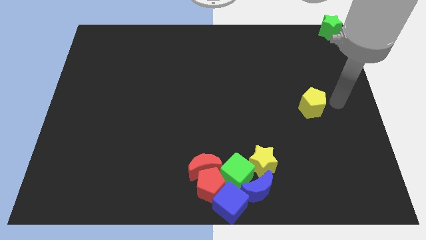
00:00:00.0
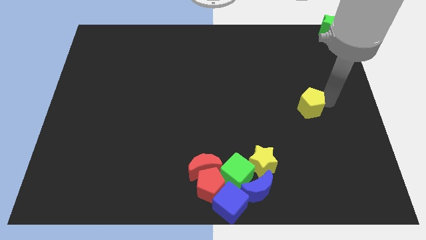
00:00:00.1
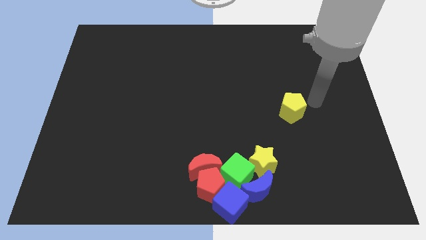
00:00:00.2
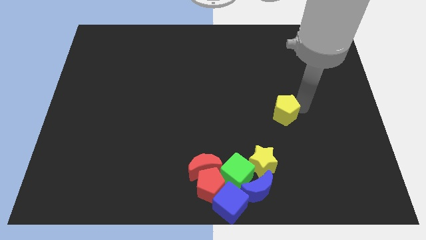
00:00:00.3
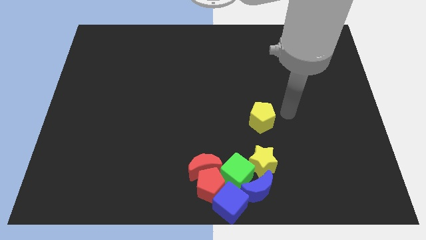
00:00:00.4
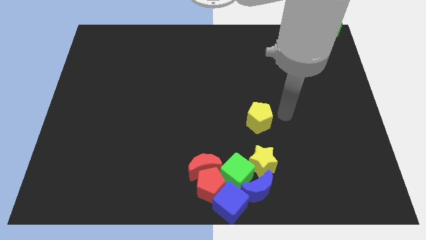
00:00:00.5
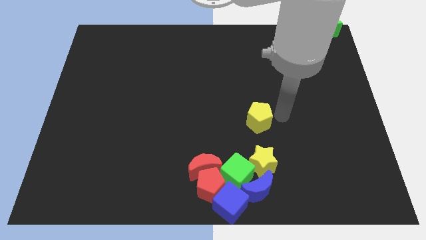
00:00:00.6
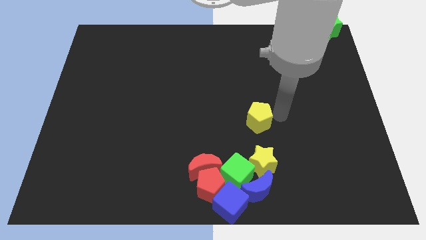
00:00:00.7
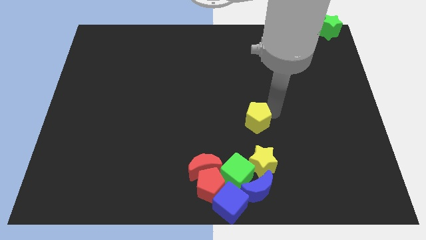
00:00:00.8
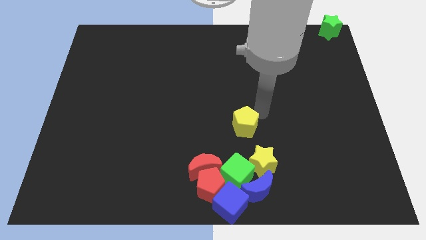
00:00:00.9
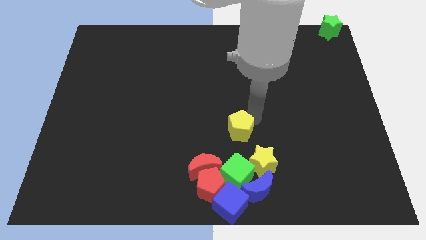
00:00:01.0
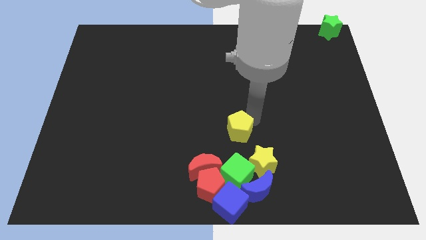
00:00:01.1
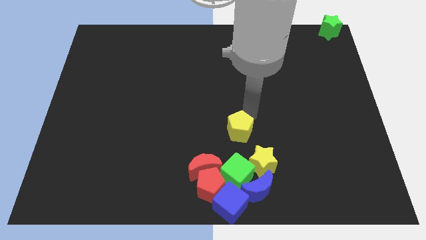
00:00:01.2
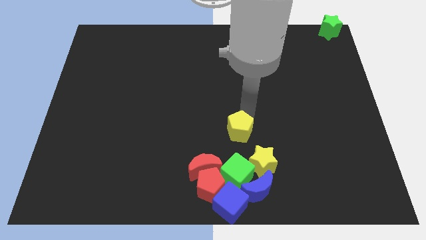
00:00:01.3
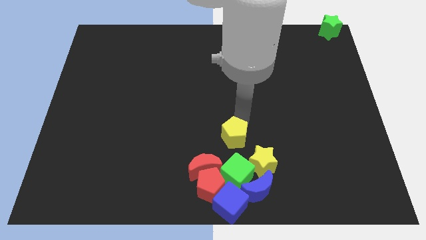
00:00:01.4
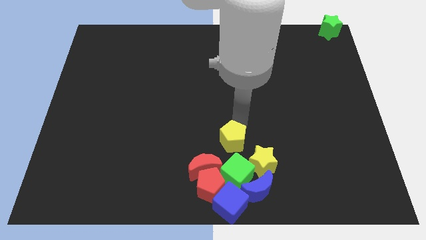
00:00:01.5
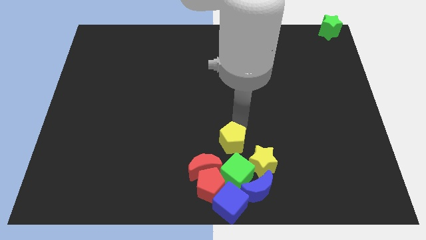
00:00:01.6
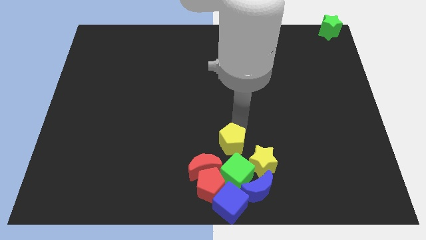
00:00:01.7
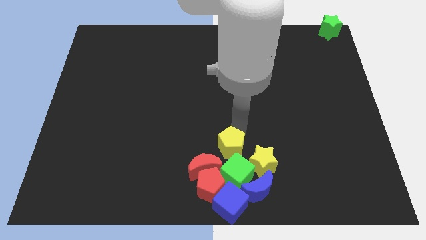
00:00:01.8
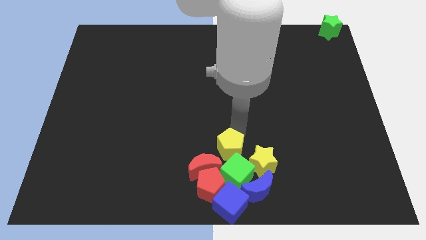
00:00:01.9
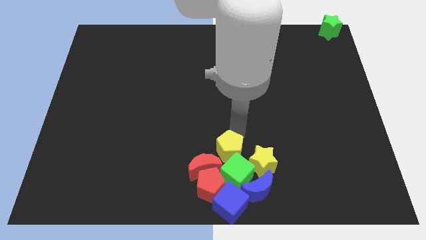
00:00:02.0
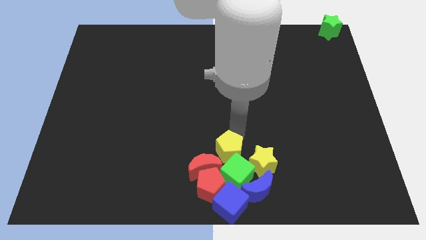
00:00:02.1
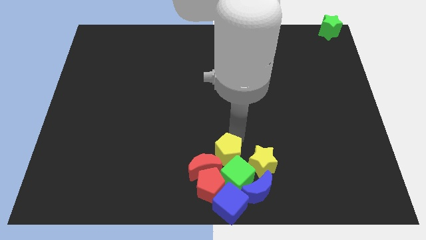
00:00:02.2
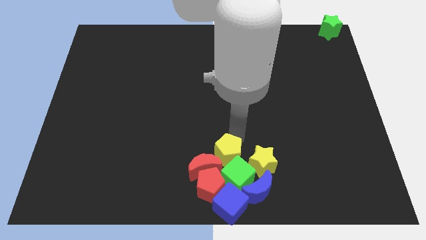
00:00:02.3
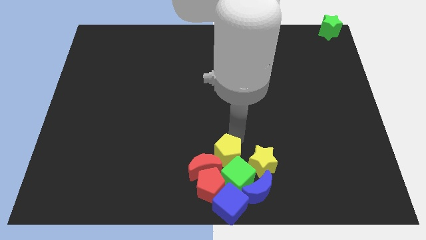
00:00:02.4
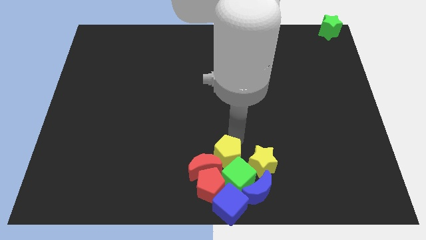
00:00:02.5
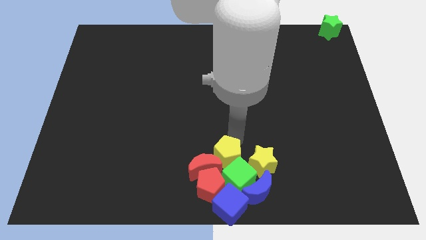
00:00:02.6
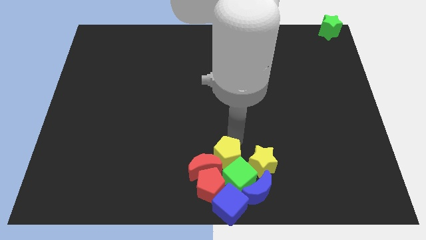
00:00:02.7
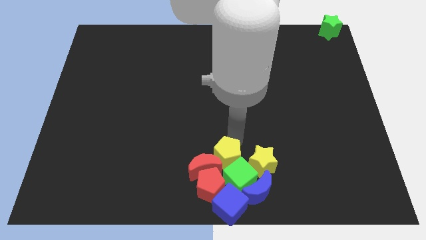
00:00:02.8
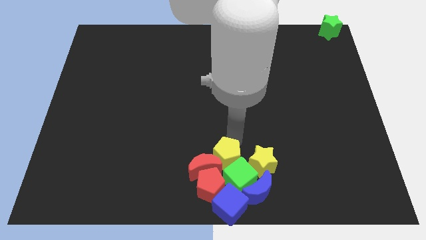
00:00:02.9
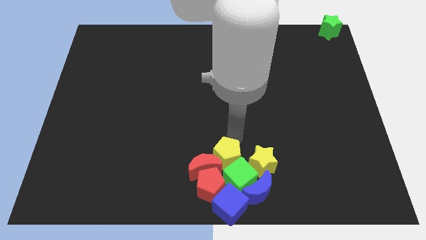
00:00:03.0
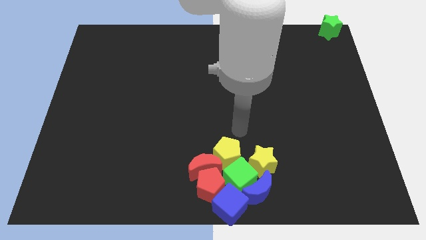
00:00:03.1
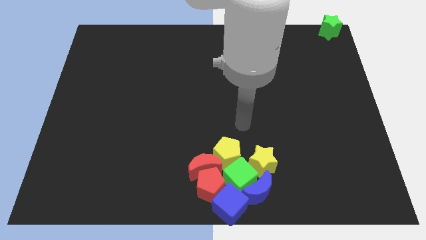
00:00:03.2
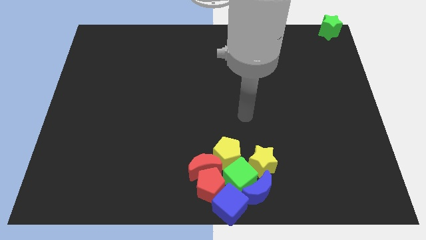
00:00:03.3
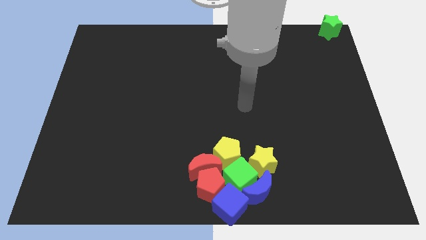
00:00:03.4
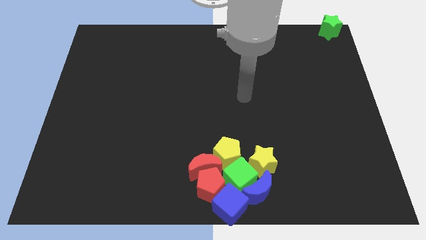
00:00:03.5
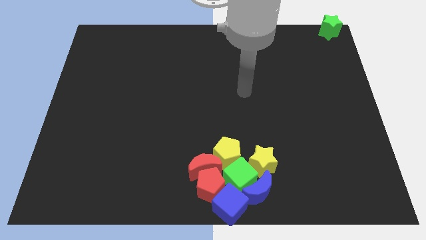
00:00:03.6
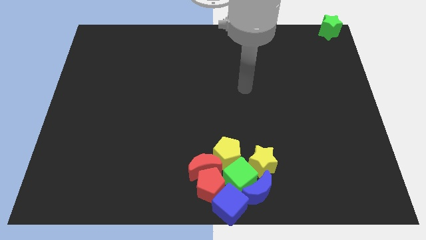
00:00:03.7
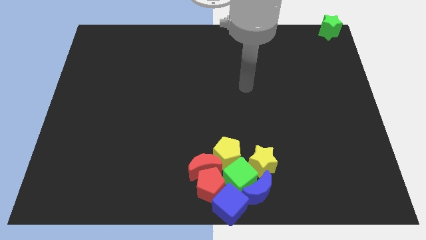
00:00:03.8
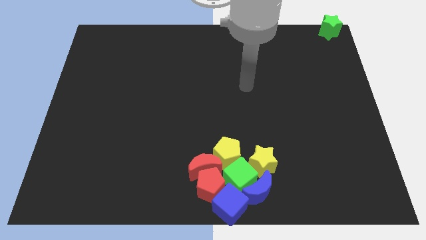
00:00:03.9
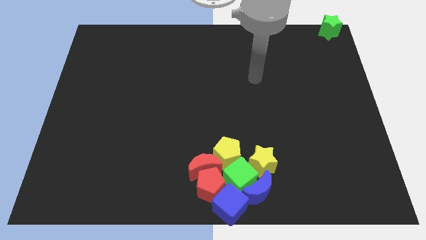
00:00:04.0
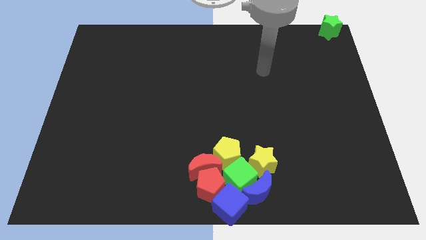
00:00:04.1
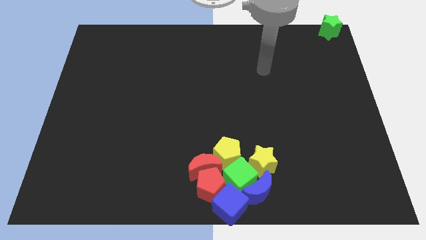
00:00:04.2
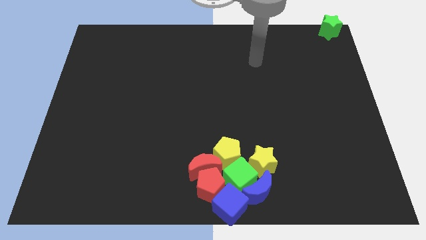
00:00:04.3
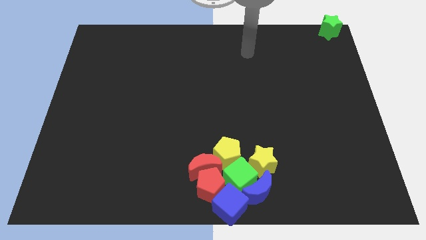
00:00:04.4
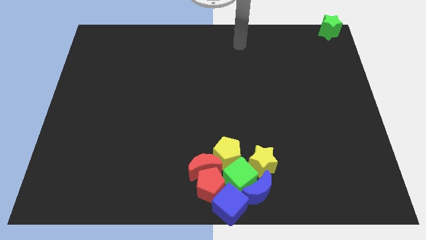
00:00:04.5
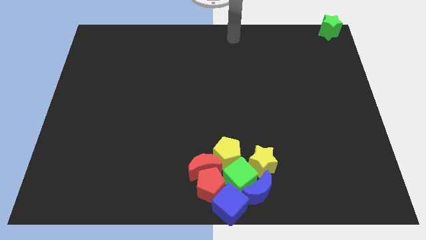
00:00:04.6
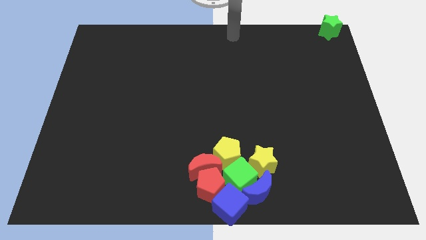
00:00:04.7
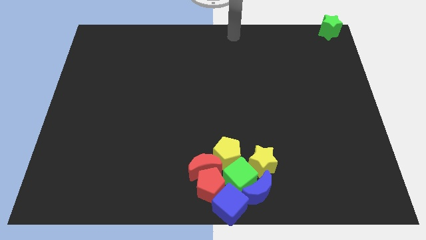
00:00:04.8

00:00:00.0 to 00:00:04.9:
push the yellow pentagon into the group of blocks

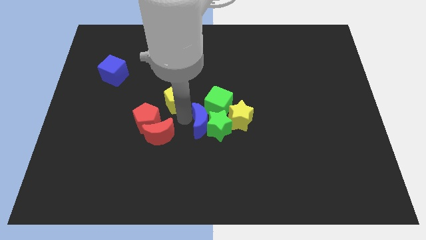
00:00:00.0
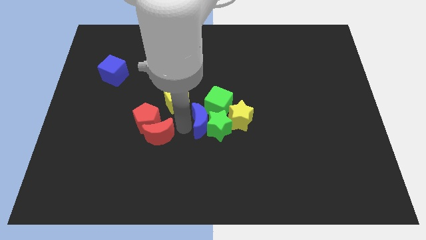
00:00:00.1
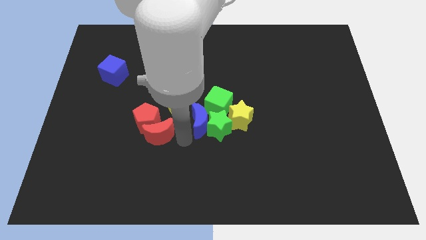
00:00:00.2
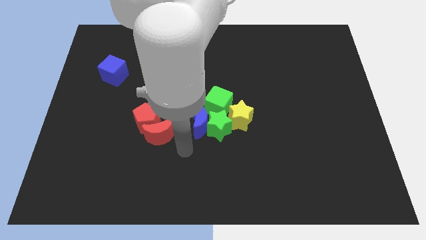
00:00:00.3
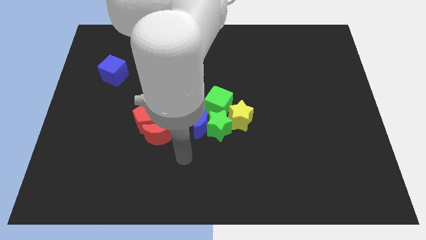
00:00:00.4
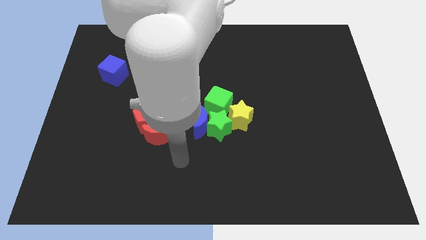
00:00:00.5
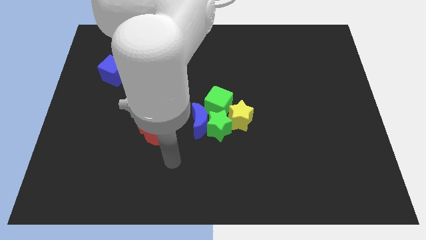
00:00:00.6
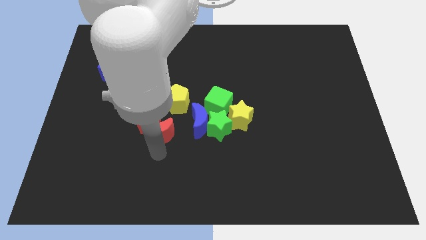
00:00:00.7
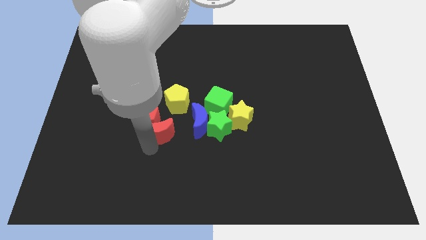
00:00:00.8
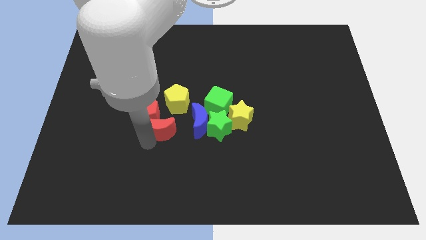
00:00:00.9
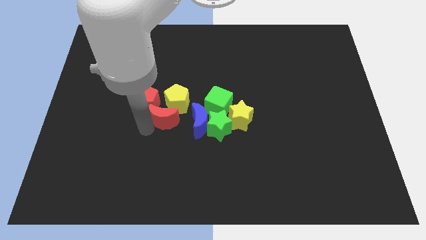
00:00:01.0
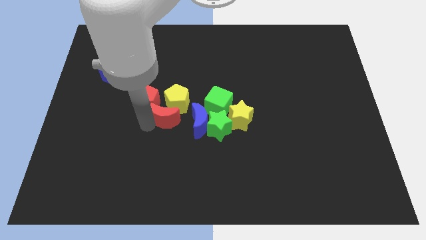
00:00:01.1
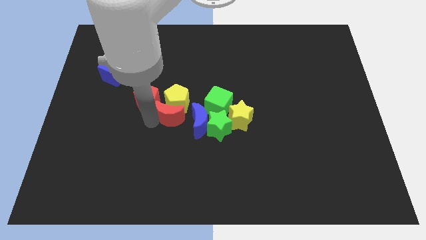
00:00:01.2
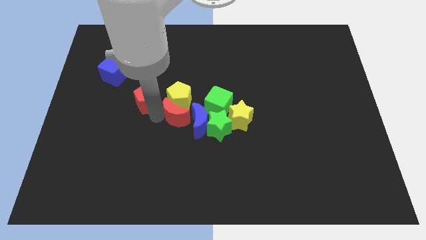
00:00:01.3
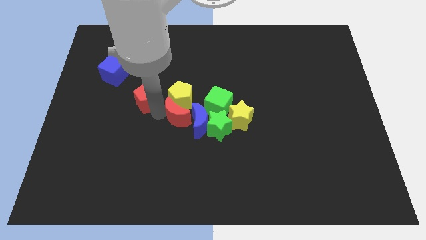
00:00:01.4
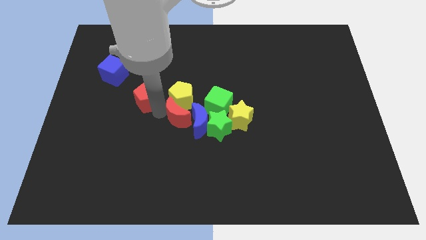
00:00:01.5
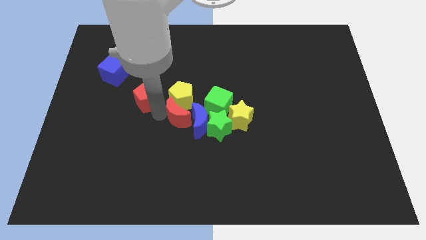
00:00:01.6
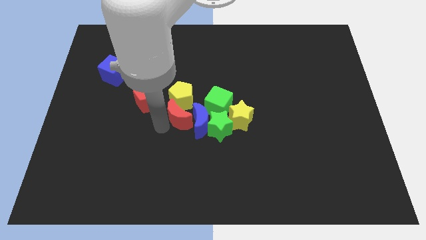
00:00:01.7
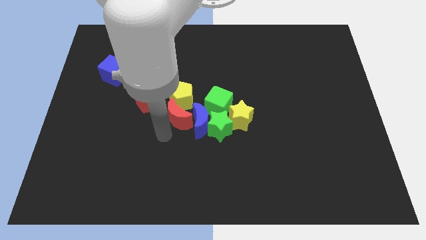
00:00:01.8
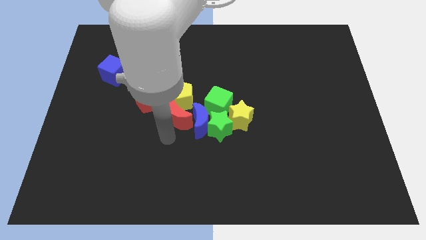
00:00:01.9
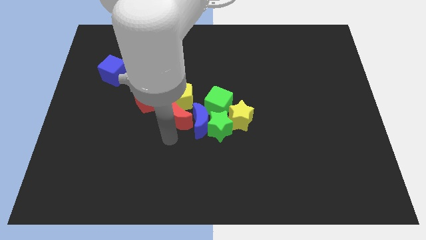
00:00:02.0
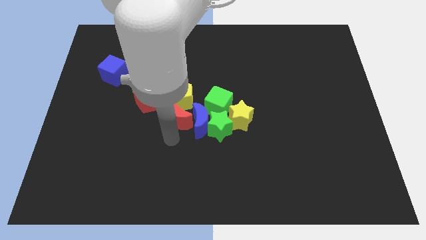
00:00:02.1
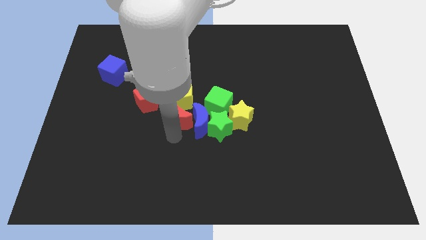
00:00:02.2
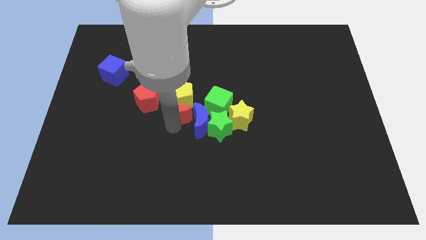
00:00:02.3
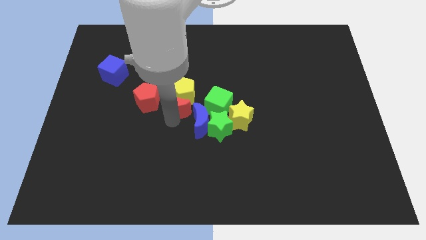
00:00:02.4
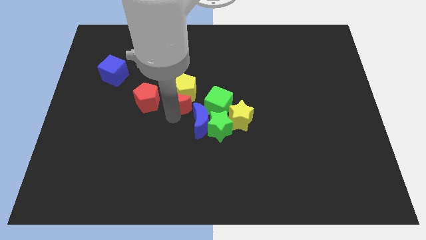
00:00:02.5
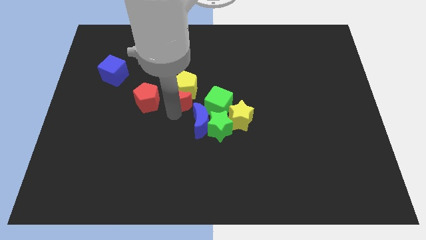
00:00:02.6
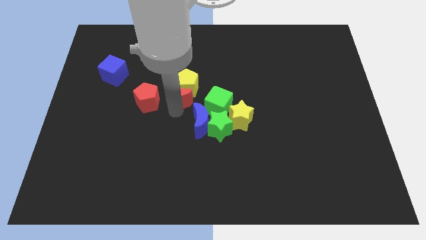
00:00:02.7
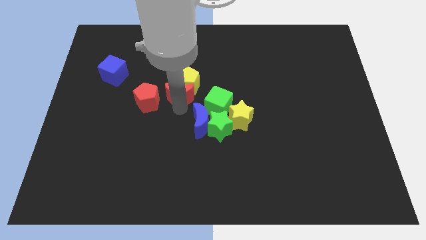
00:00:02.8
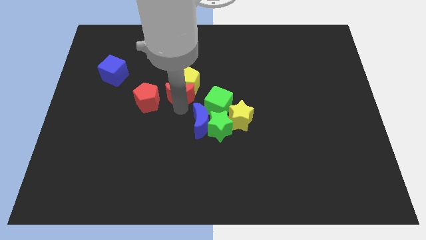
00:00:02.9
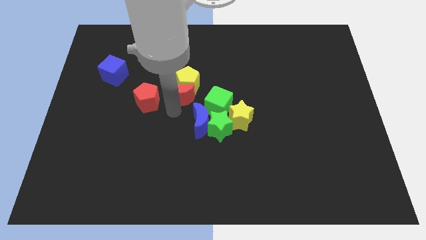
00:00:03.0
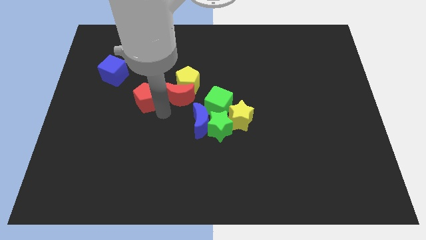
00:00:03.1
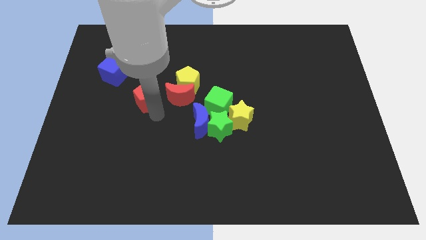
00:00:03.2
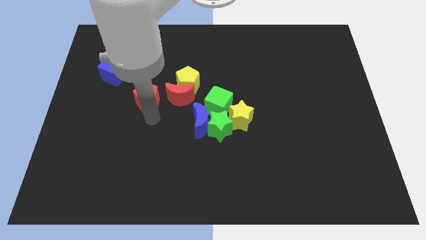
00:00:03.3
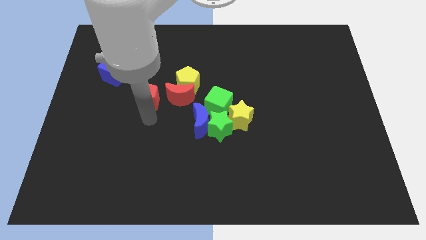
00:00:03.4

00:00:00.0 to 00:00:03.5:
drag the yellow pentagon and red moon to the top left side of the green cube

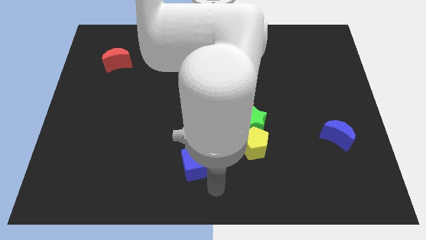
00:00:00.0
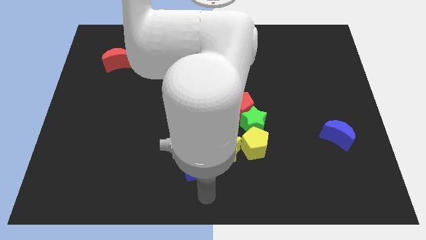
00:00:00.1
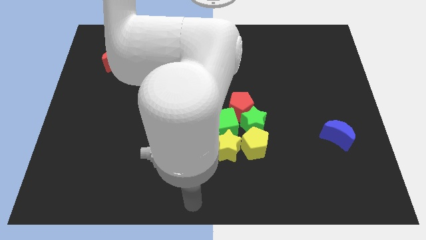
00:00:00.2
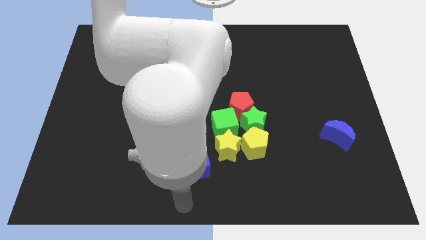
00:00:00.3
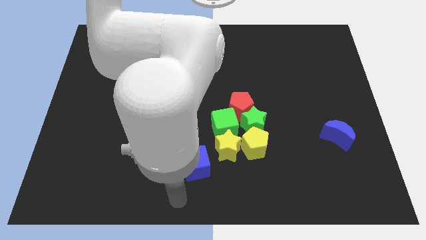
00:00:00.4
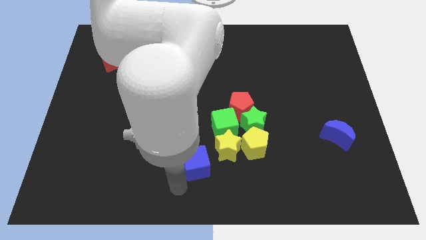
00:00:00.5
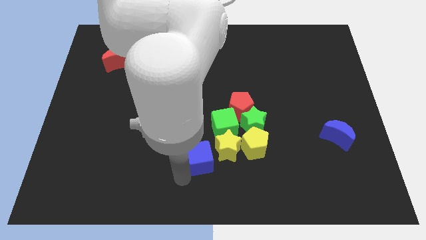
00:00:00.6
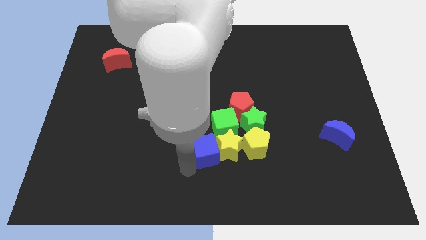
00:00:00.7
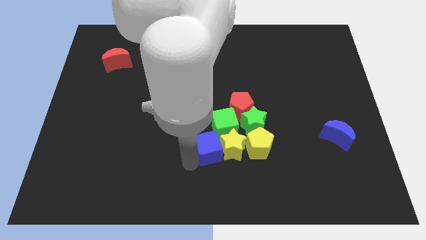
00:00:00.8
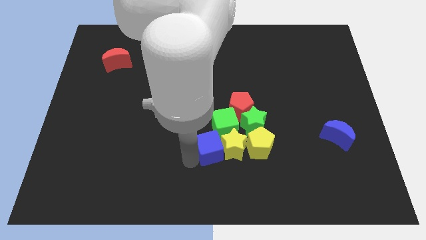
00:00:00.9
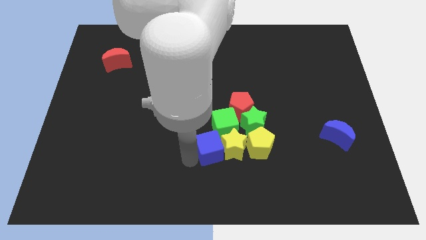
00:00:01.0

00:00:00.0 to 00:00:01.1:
push the blue cube into yellow star
